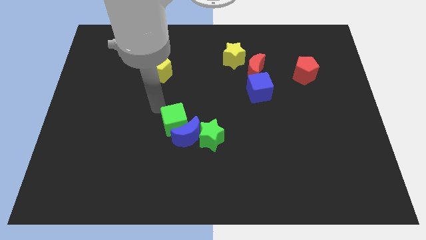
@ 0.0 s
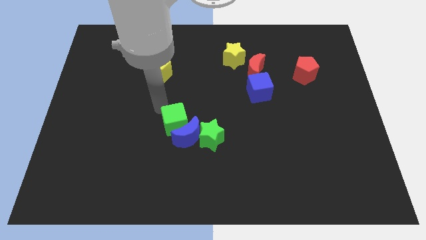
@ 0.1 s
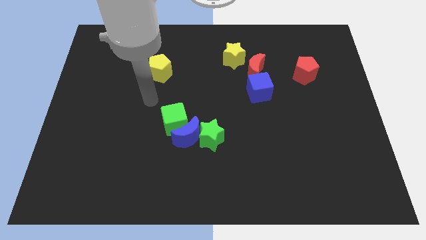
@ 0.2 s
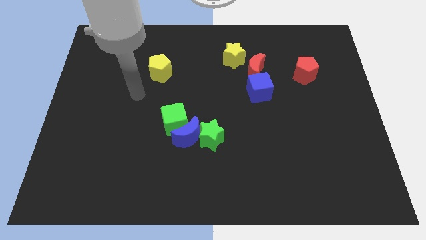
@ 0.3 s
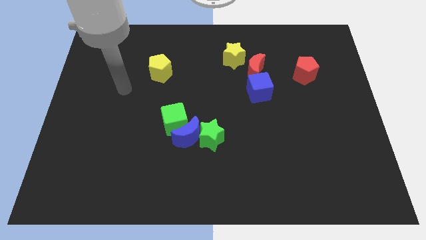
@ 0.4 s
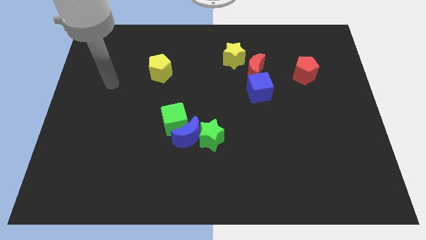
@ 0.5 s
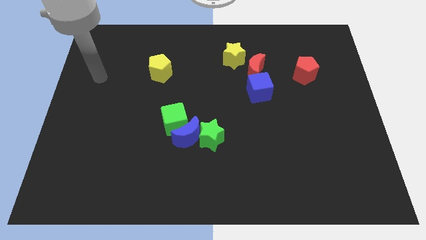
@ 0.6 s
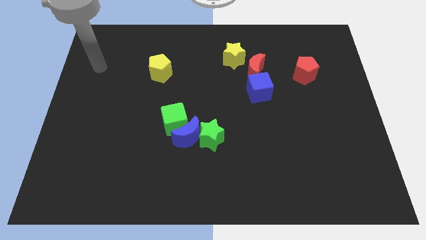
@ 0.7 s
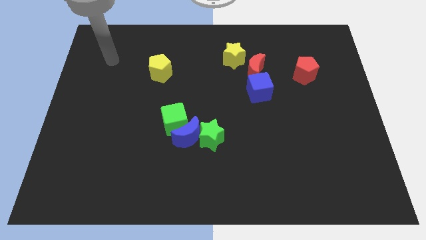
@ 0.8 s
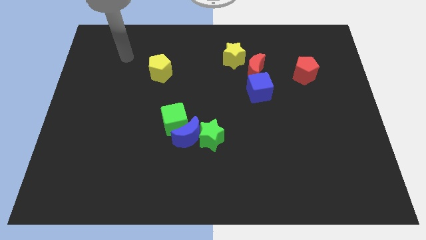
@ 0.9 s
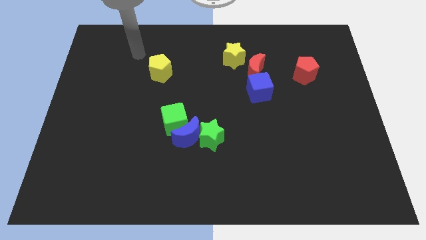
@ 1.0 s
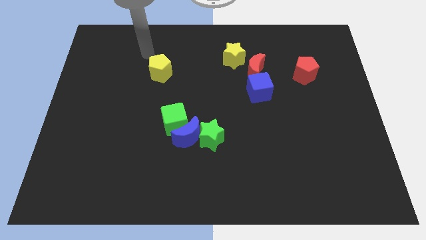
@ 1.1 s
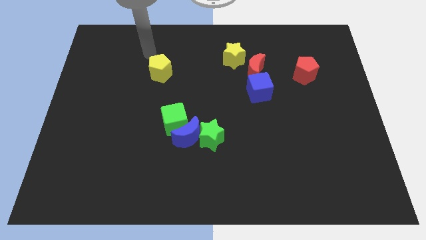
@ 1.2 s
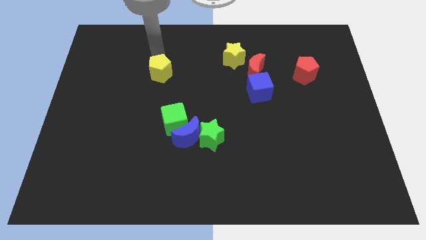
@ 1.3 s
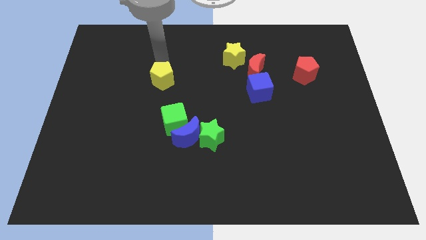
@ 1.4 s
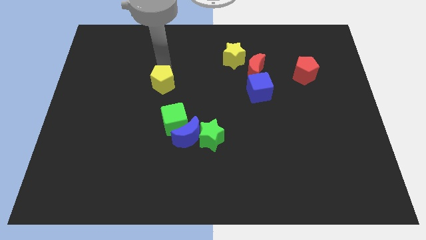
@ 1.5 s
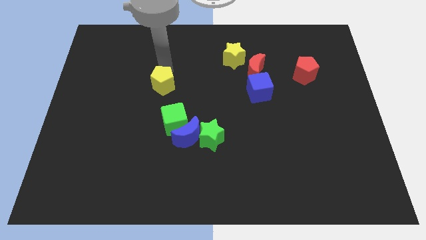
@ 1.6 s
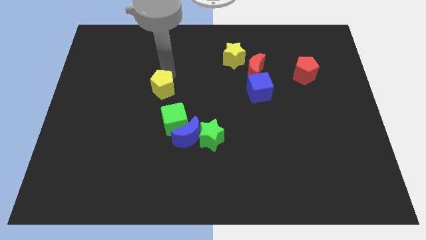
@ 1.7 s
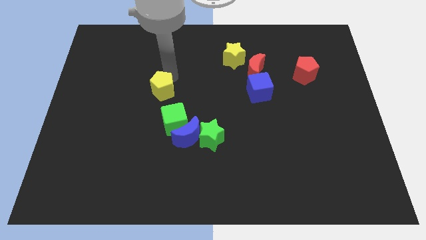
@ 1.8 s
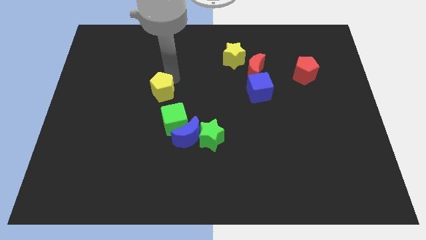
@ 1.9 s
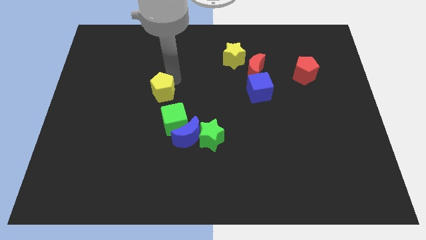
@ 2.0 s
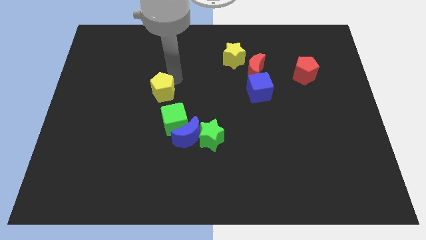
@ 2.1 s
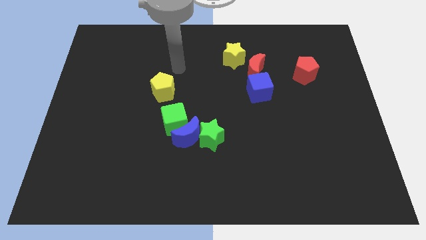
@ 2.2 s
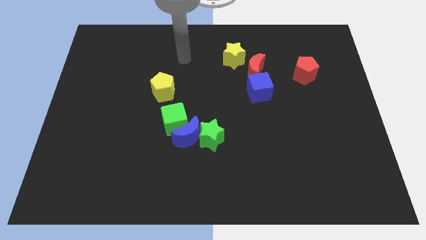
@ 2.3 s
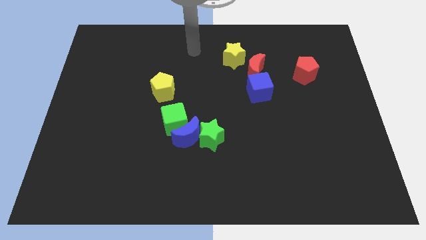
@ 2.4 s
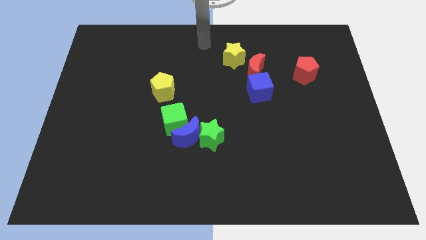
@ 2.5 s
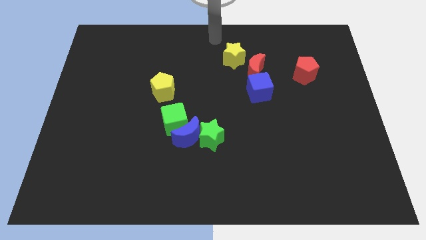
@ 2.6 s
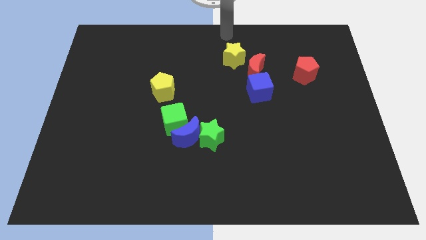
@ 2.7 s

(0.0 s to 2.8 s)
place the yellow pentagon above the green cube and move away

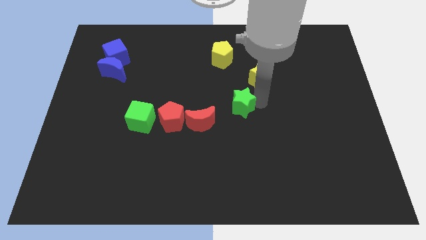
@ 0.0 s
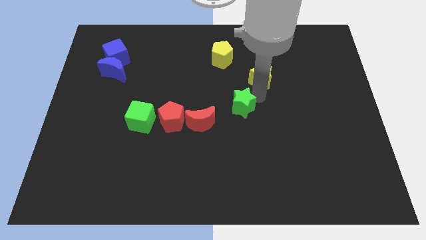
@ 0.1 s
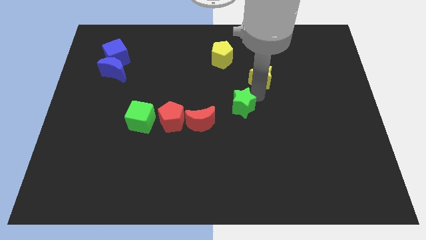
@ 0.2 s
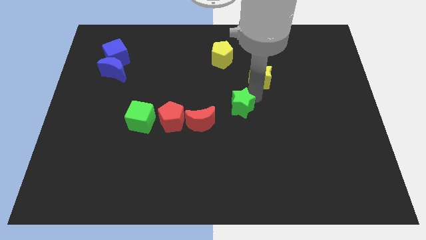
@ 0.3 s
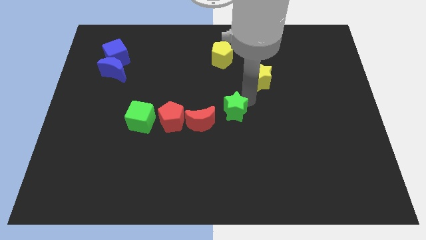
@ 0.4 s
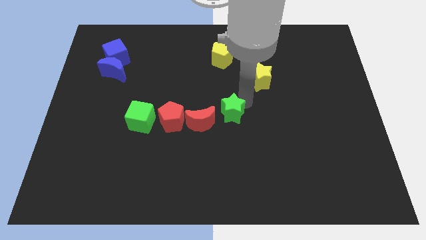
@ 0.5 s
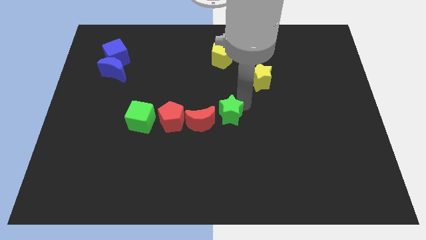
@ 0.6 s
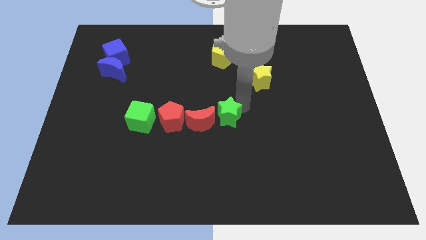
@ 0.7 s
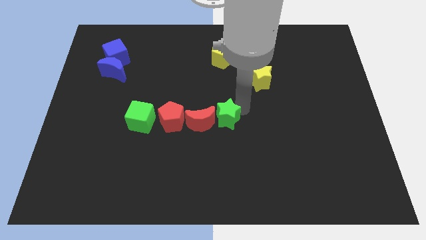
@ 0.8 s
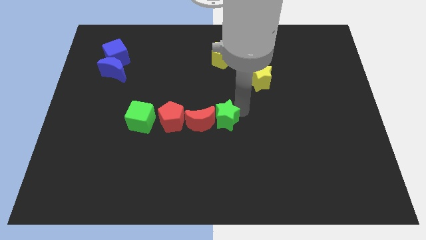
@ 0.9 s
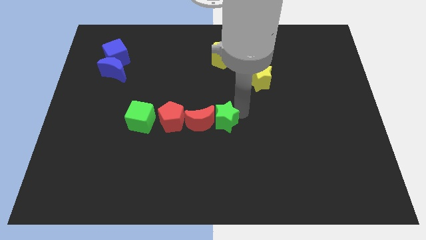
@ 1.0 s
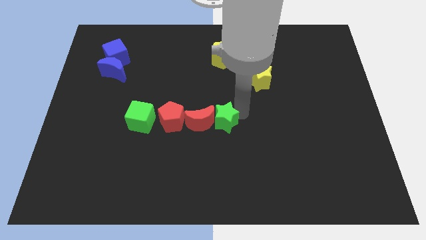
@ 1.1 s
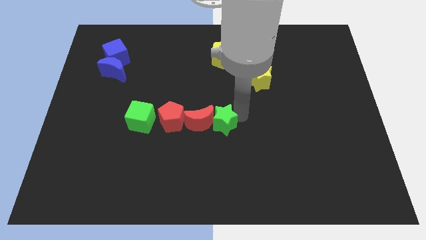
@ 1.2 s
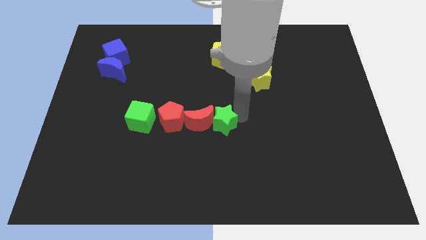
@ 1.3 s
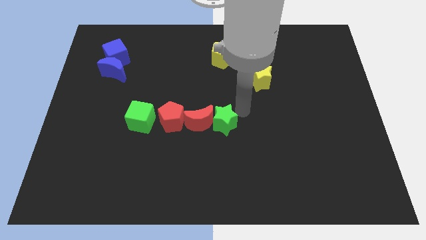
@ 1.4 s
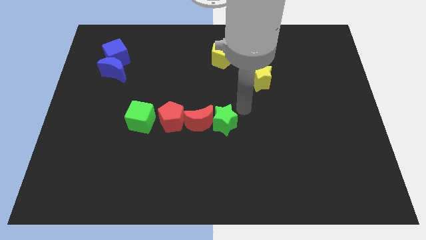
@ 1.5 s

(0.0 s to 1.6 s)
place the green star parallel to the yellow pentagon

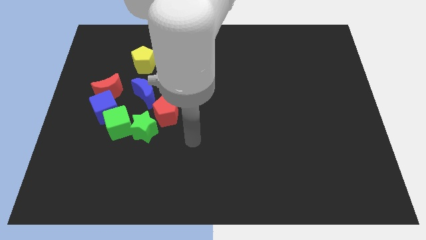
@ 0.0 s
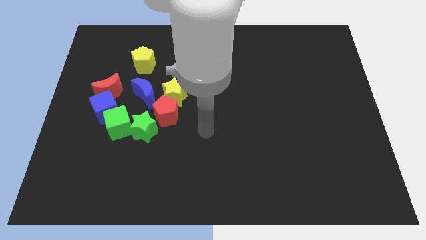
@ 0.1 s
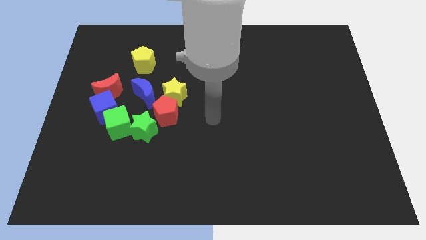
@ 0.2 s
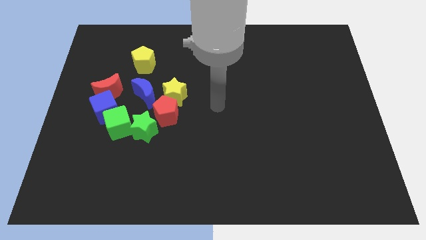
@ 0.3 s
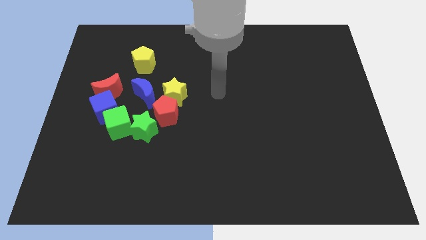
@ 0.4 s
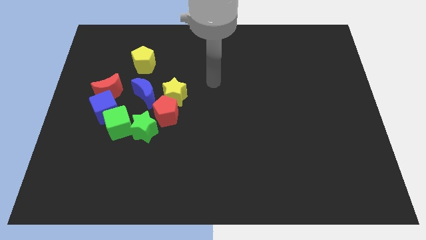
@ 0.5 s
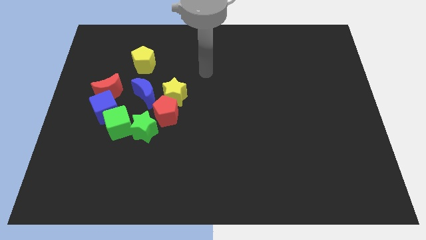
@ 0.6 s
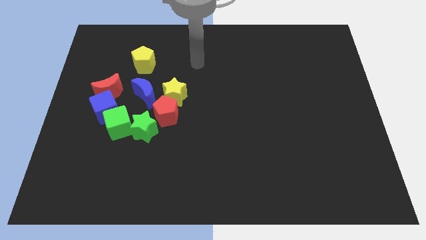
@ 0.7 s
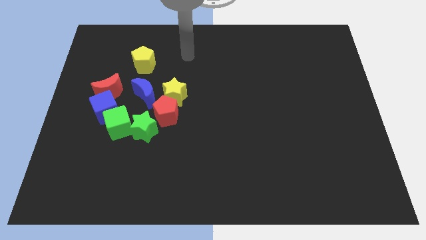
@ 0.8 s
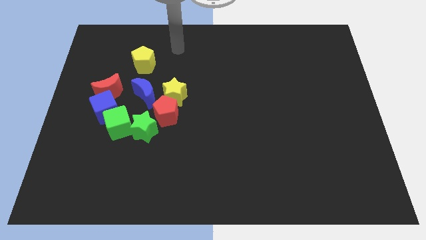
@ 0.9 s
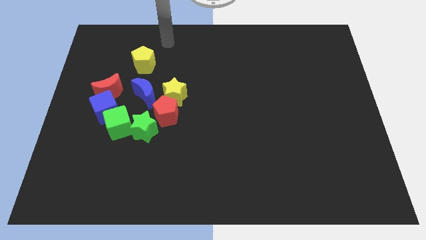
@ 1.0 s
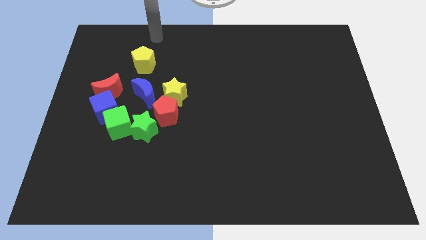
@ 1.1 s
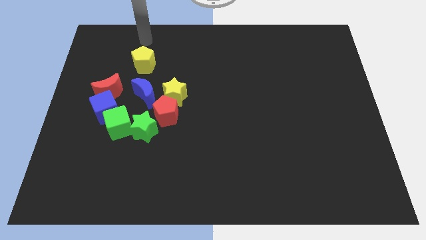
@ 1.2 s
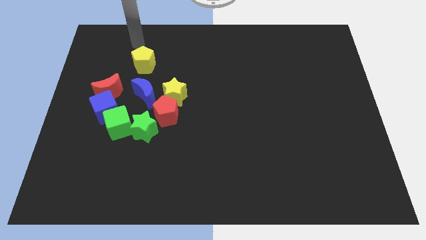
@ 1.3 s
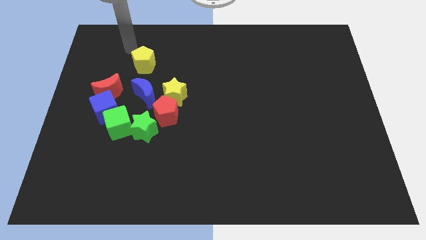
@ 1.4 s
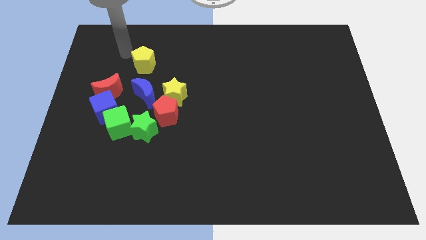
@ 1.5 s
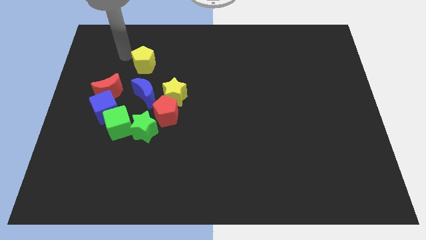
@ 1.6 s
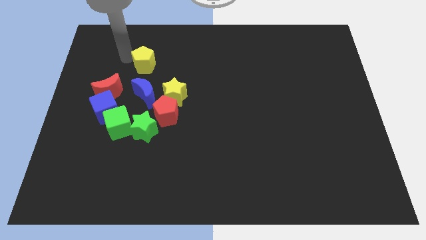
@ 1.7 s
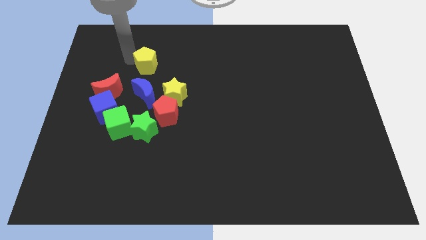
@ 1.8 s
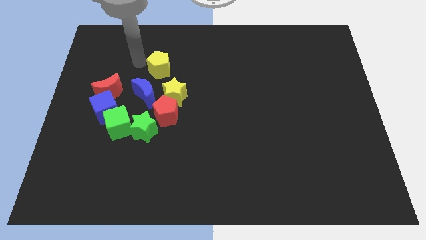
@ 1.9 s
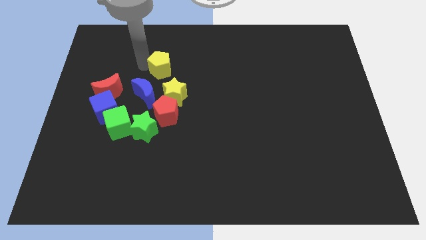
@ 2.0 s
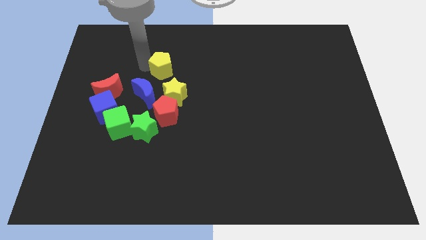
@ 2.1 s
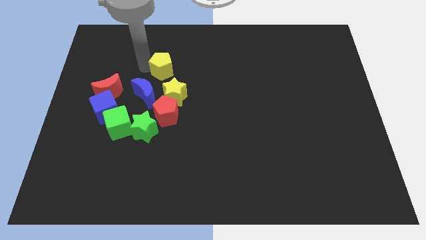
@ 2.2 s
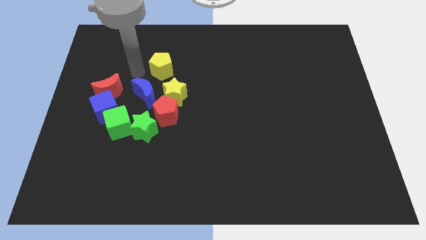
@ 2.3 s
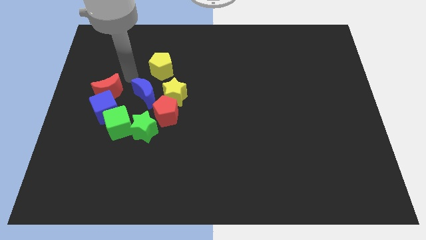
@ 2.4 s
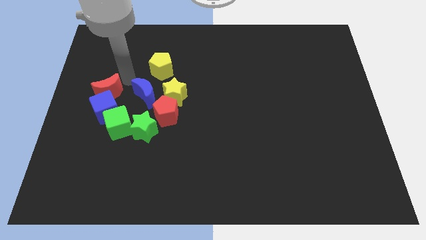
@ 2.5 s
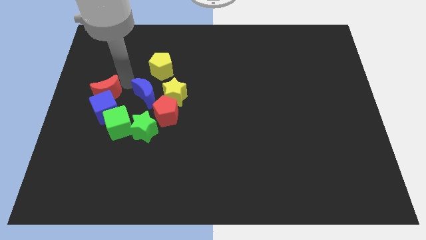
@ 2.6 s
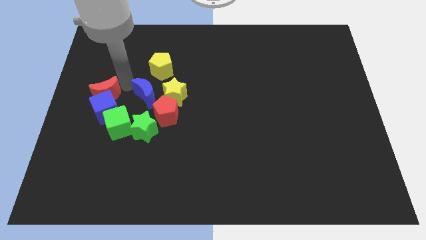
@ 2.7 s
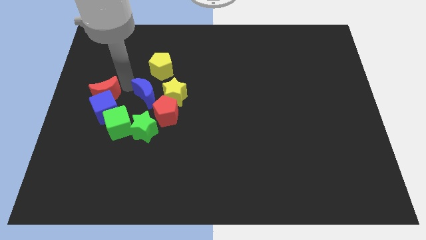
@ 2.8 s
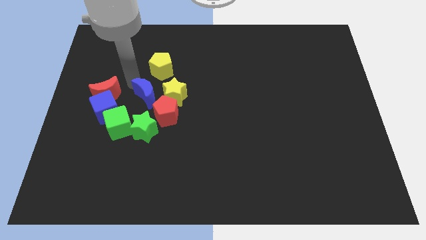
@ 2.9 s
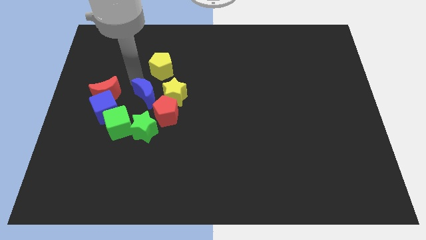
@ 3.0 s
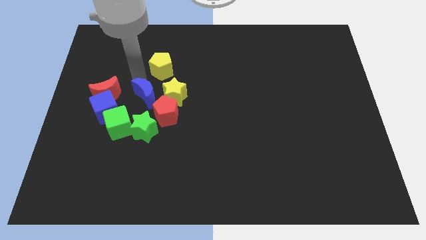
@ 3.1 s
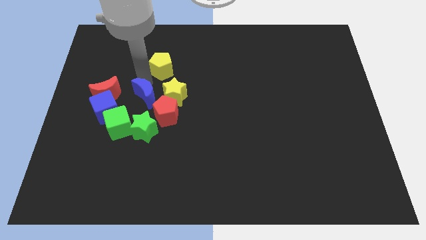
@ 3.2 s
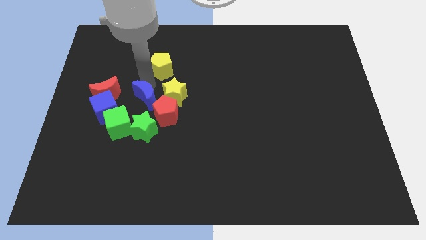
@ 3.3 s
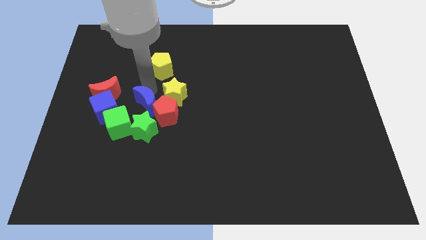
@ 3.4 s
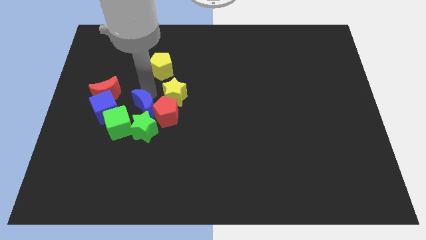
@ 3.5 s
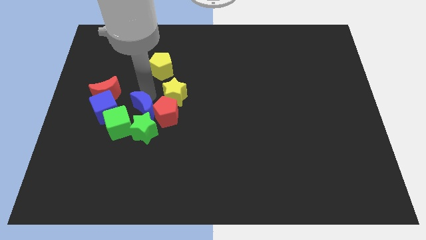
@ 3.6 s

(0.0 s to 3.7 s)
place your arm on the top of blue crescent

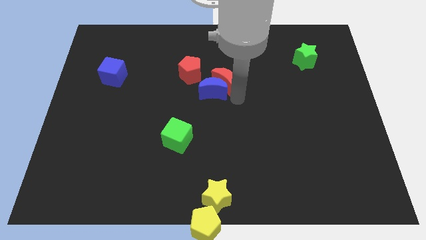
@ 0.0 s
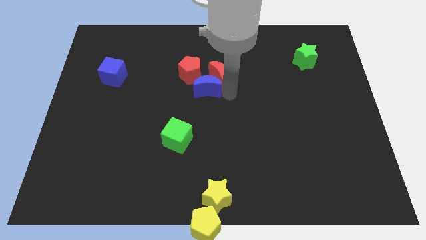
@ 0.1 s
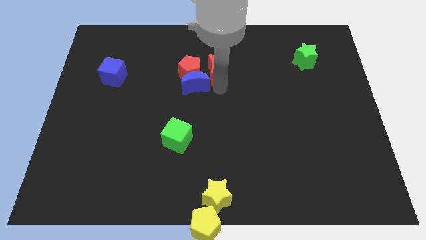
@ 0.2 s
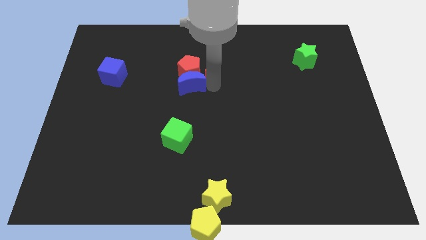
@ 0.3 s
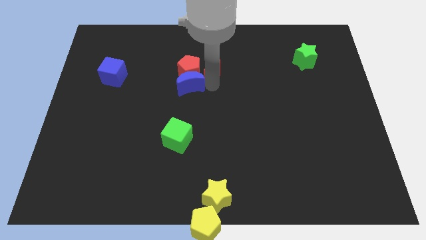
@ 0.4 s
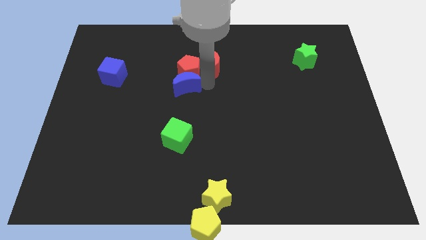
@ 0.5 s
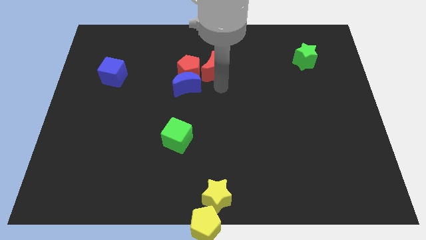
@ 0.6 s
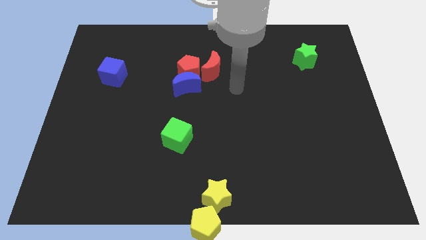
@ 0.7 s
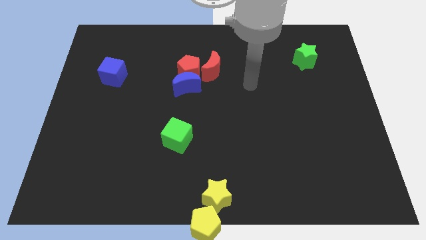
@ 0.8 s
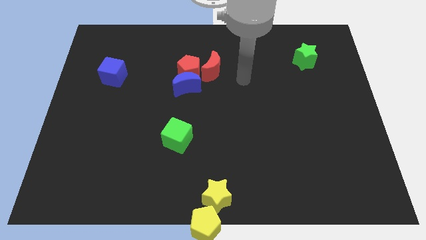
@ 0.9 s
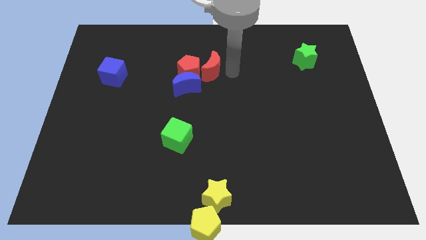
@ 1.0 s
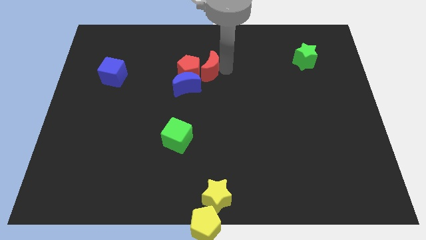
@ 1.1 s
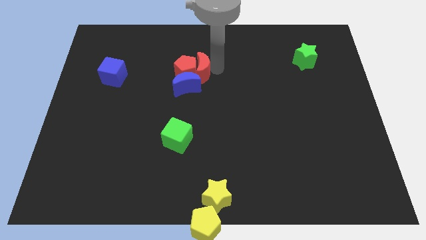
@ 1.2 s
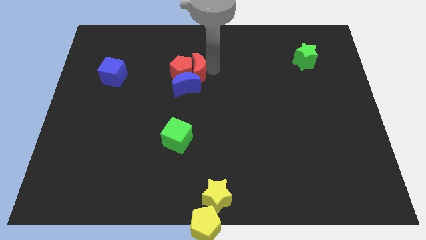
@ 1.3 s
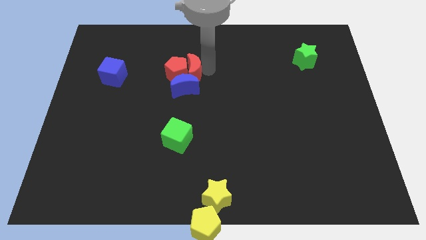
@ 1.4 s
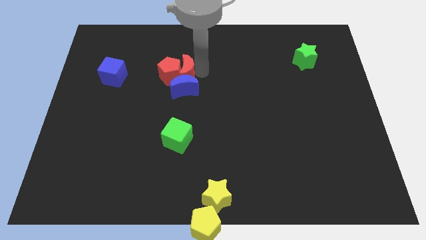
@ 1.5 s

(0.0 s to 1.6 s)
place red and blue crescents to either sides of red pentagon
